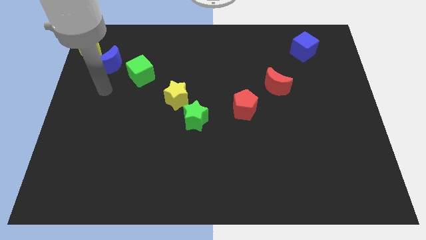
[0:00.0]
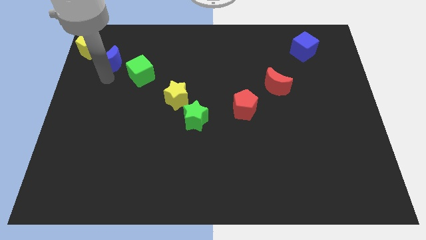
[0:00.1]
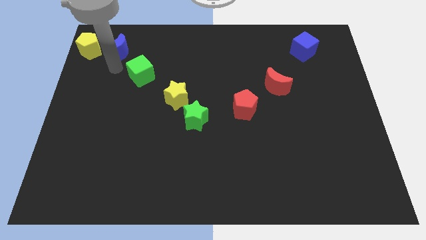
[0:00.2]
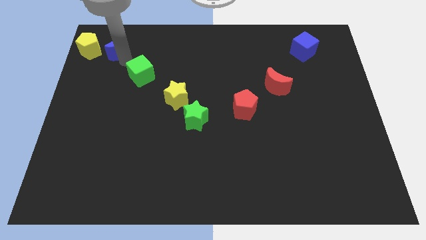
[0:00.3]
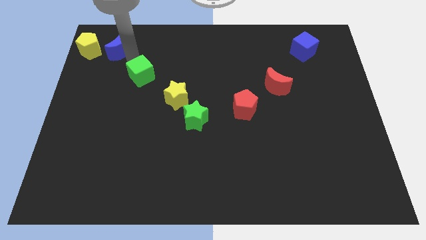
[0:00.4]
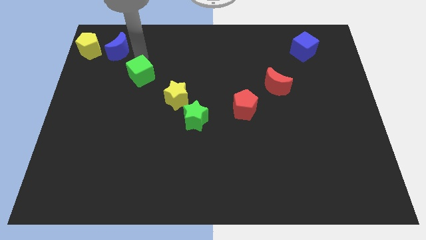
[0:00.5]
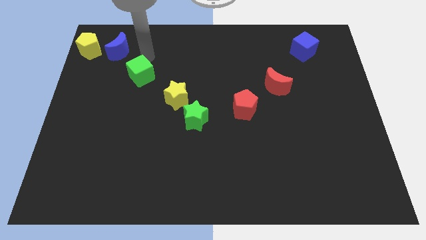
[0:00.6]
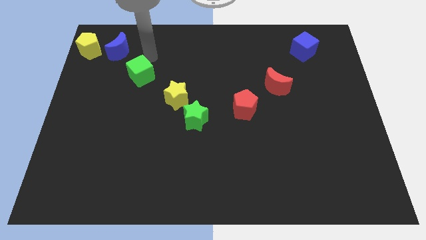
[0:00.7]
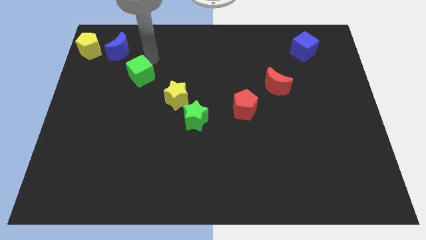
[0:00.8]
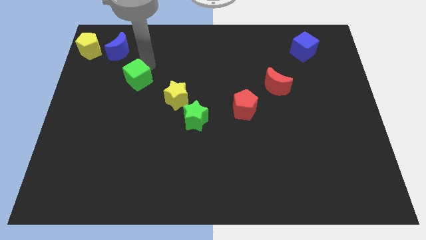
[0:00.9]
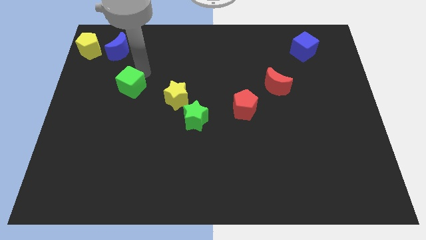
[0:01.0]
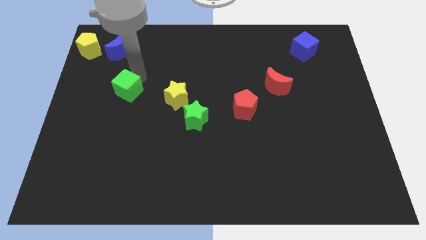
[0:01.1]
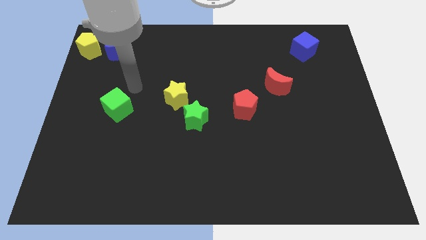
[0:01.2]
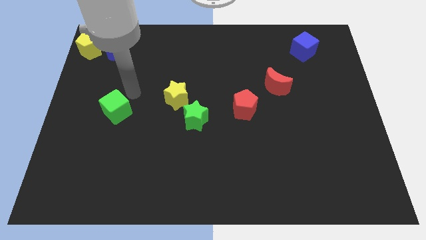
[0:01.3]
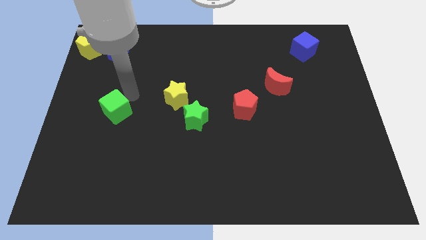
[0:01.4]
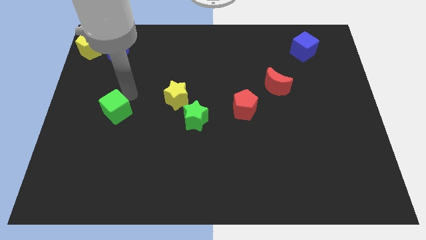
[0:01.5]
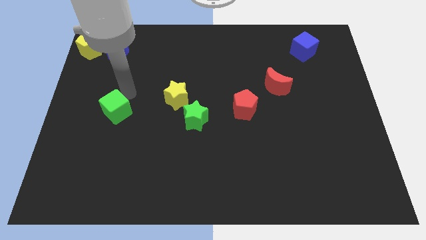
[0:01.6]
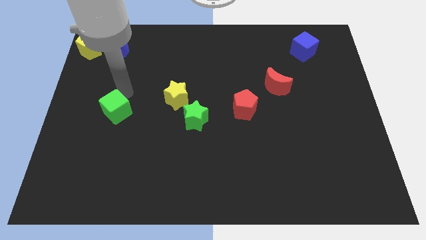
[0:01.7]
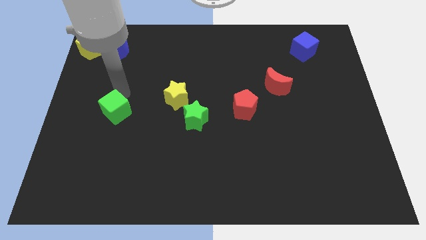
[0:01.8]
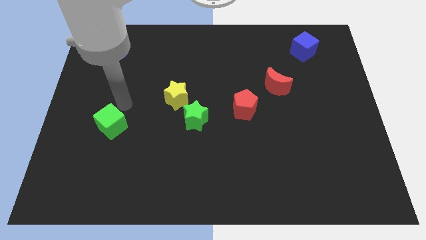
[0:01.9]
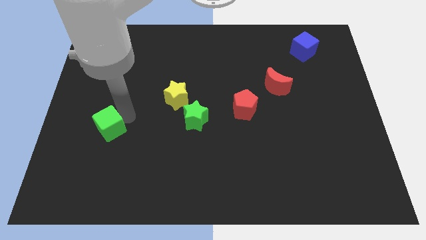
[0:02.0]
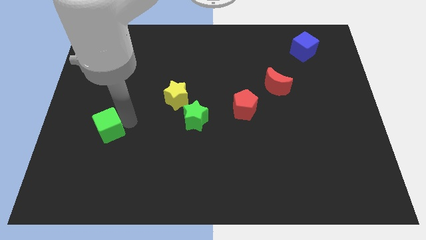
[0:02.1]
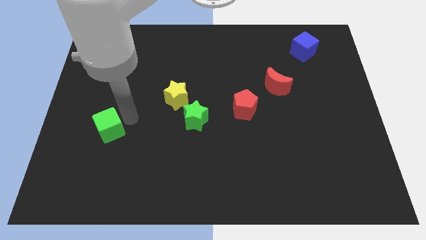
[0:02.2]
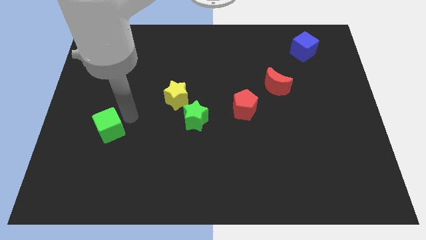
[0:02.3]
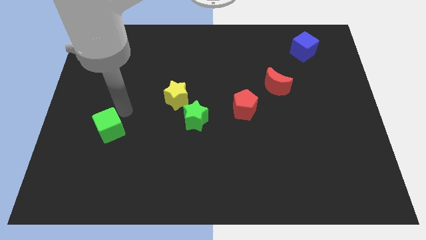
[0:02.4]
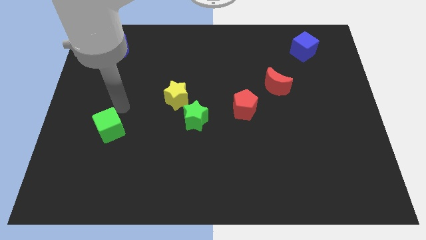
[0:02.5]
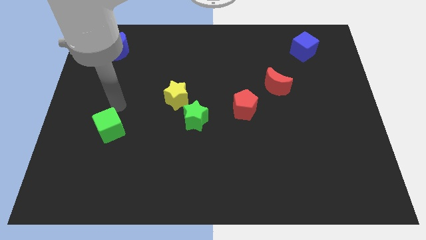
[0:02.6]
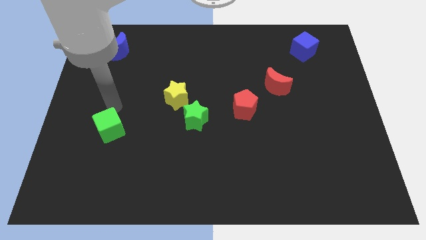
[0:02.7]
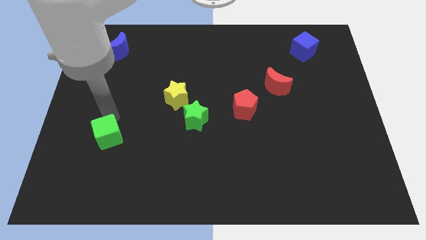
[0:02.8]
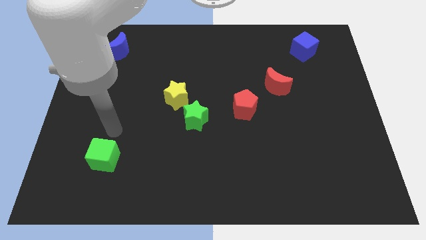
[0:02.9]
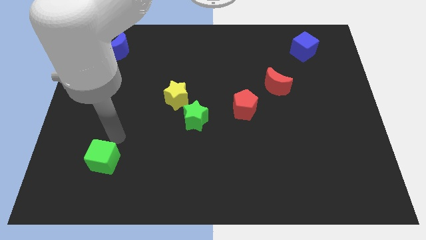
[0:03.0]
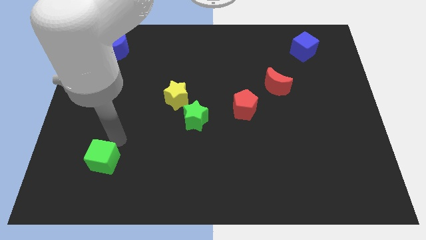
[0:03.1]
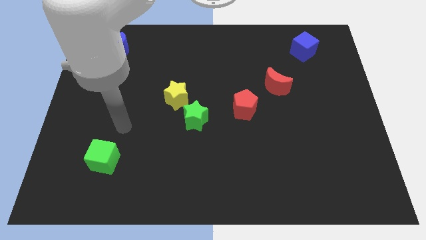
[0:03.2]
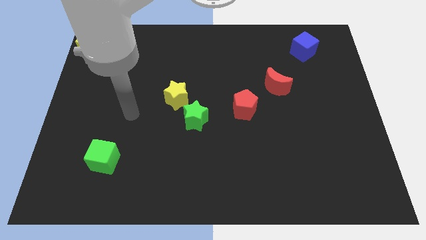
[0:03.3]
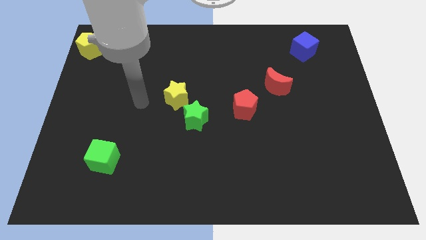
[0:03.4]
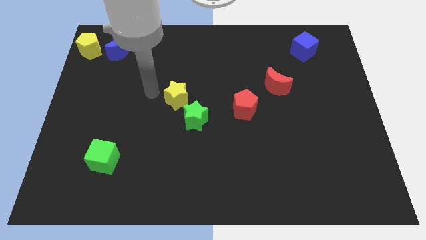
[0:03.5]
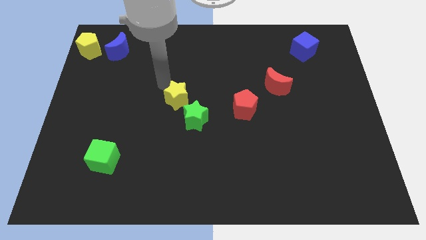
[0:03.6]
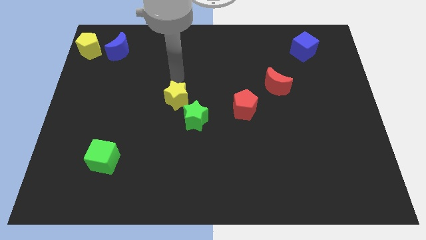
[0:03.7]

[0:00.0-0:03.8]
slightly move the green cube towards down

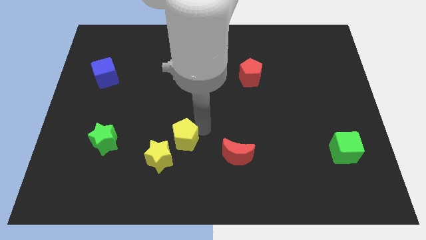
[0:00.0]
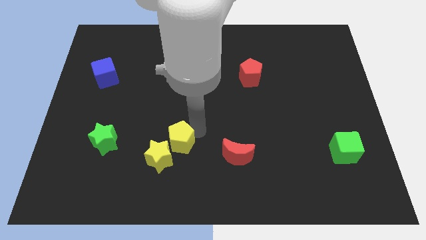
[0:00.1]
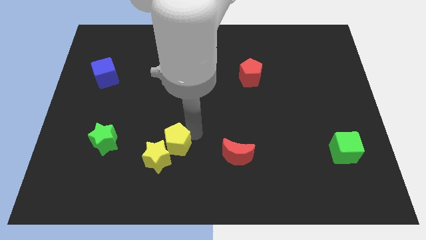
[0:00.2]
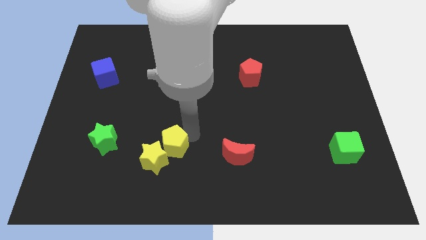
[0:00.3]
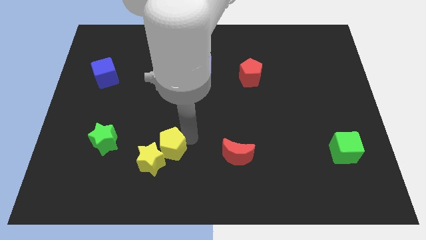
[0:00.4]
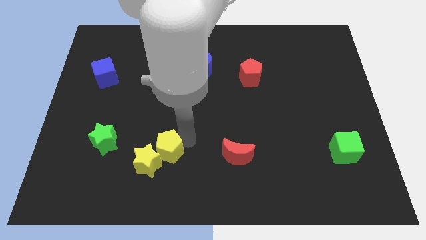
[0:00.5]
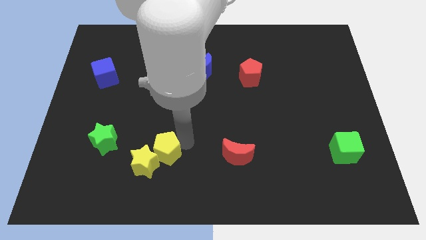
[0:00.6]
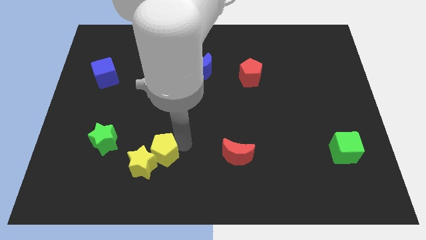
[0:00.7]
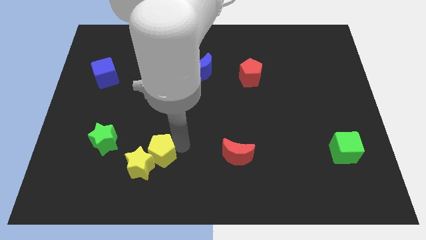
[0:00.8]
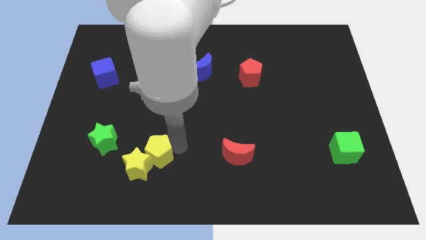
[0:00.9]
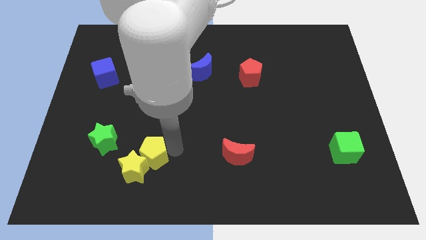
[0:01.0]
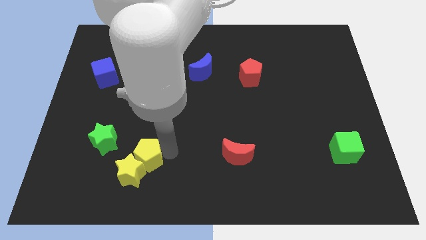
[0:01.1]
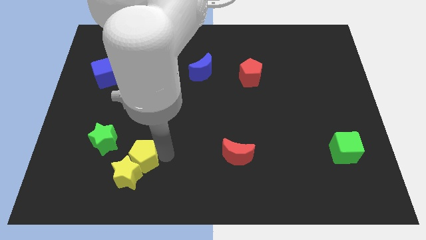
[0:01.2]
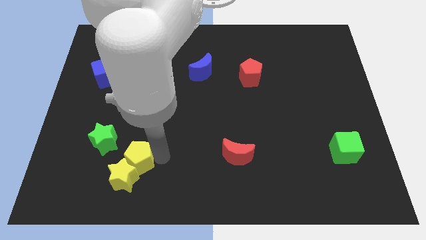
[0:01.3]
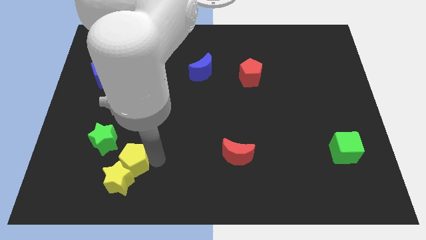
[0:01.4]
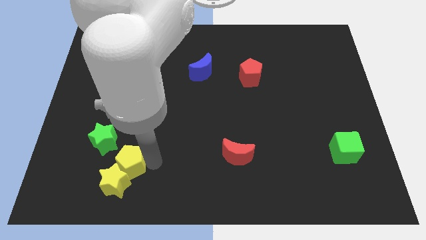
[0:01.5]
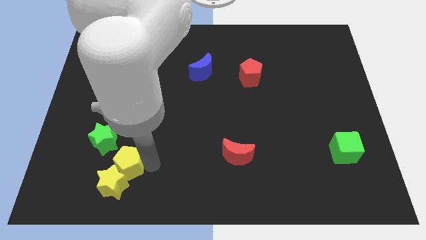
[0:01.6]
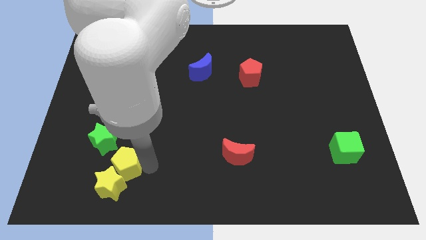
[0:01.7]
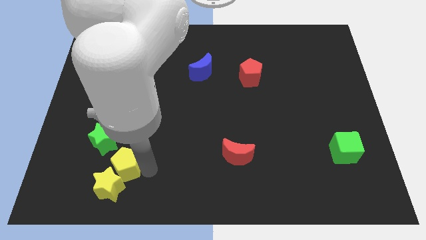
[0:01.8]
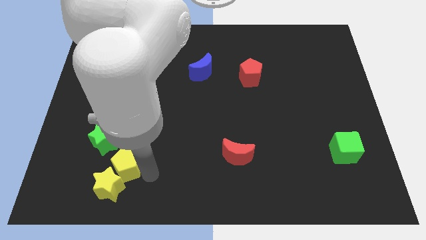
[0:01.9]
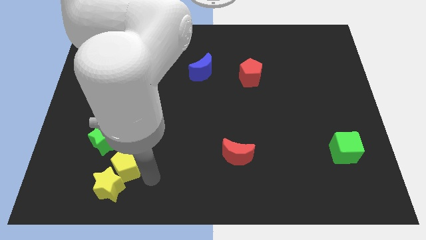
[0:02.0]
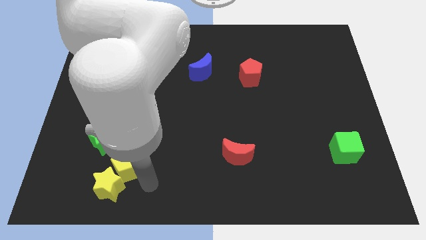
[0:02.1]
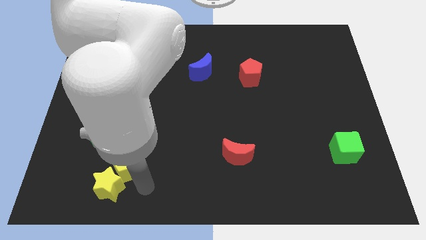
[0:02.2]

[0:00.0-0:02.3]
push the yellow pentagon and yellow star to the bottom right side of the green star

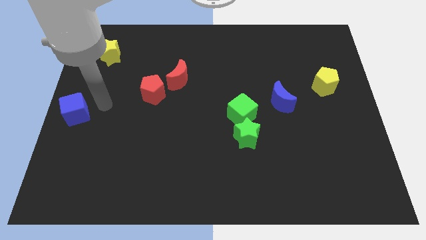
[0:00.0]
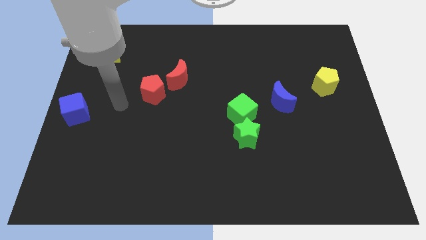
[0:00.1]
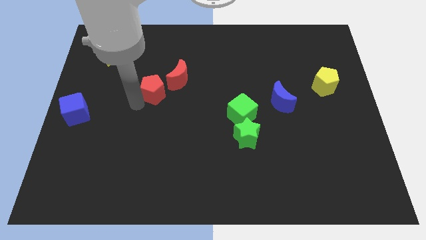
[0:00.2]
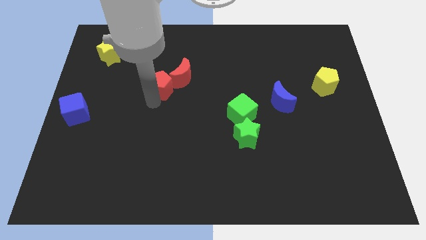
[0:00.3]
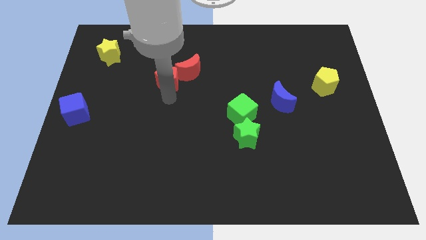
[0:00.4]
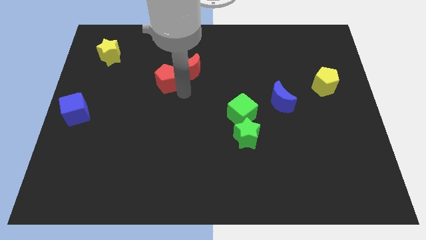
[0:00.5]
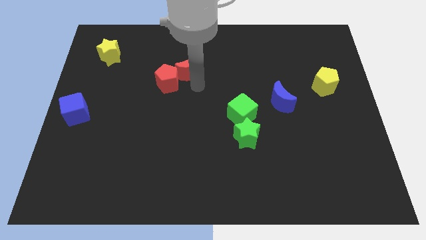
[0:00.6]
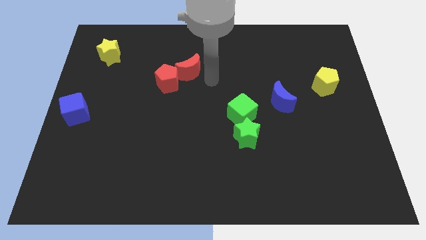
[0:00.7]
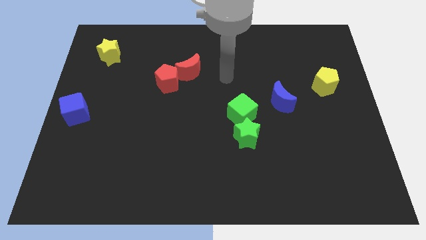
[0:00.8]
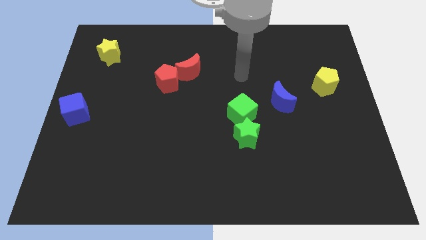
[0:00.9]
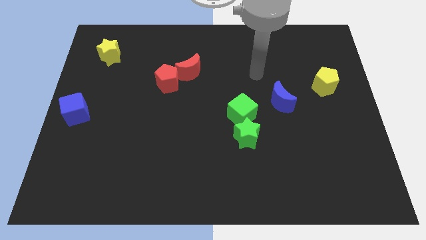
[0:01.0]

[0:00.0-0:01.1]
slightly push red pentagon

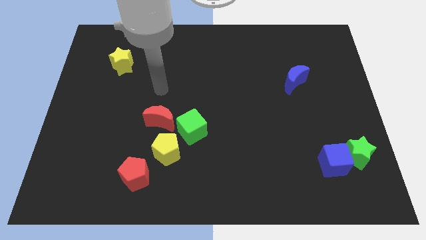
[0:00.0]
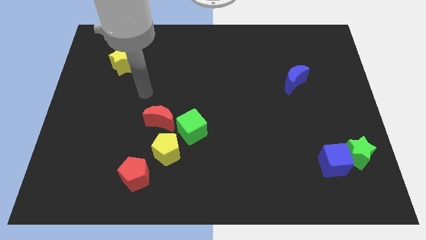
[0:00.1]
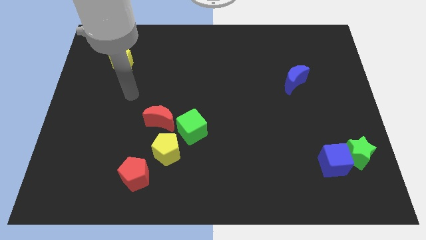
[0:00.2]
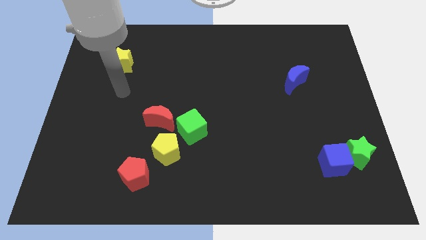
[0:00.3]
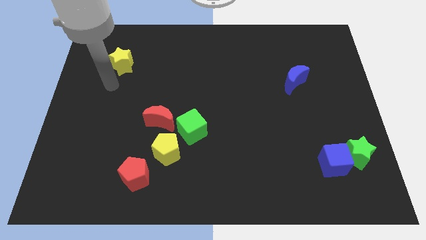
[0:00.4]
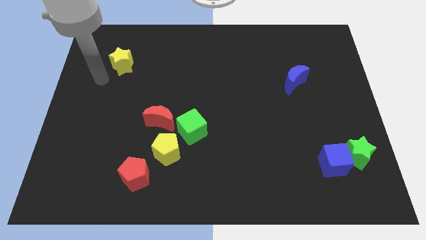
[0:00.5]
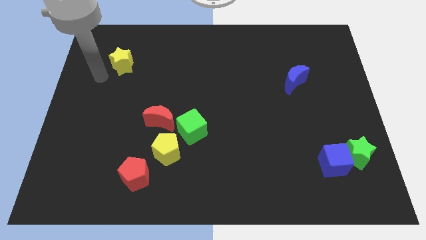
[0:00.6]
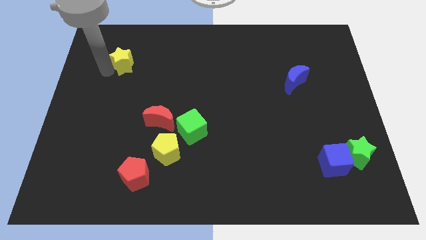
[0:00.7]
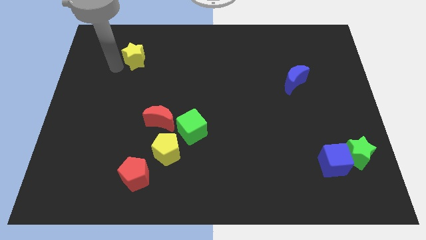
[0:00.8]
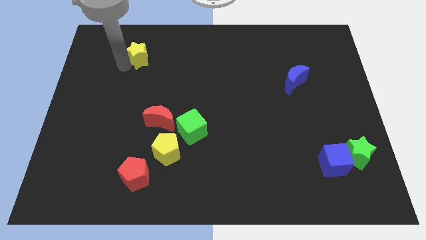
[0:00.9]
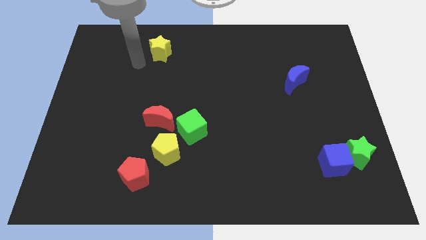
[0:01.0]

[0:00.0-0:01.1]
move yellow star slightly to the right

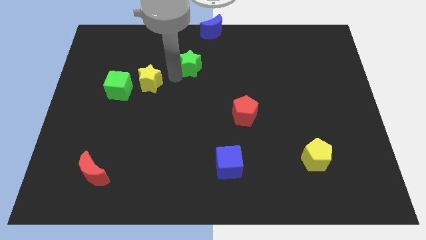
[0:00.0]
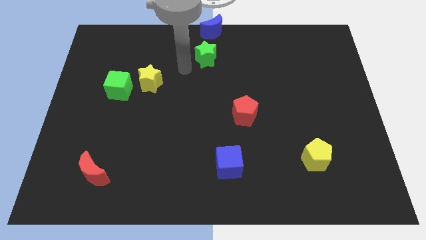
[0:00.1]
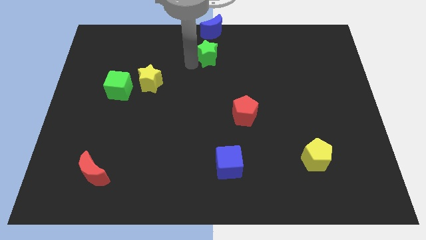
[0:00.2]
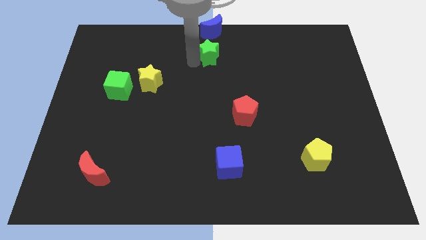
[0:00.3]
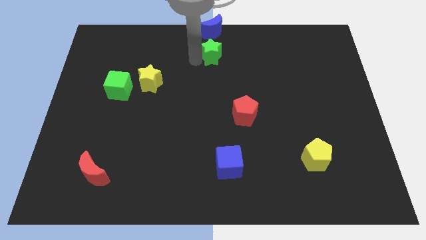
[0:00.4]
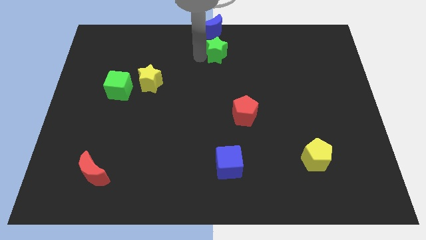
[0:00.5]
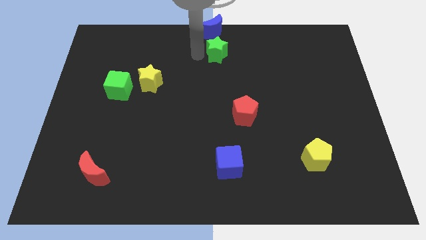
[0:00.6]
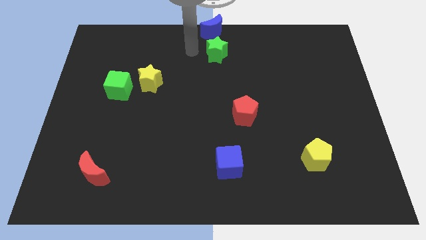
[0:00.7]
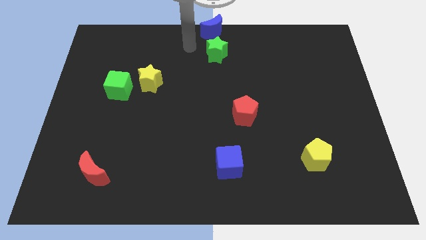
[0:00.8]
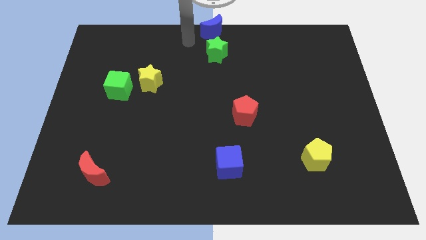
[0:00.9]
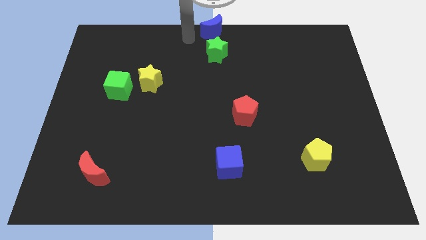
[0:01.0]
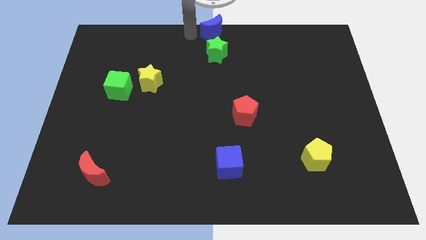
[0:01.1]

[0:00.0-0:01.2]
reposition the green star below the blue crescent
